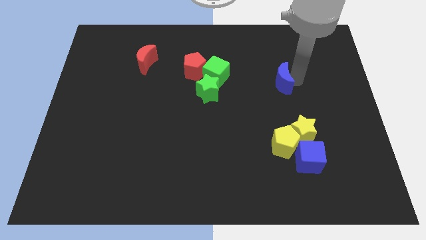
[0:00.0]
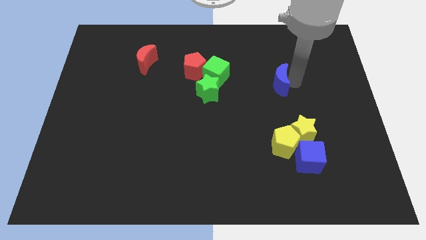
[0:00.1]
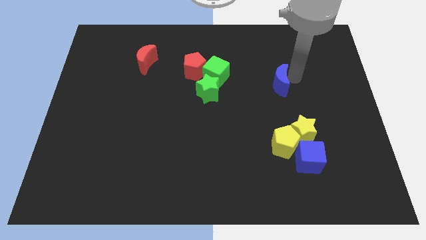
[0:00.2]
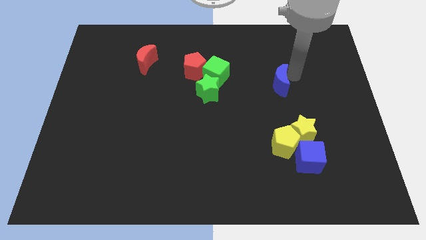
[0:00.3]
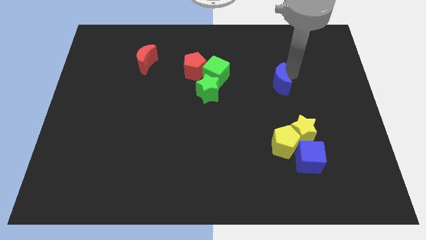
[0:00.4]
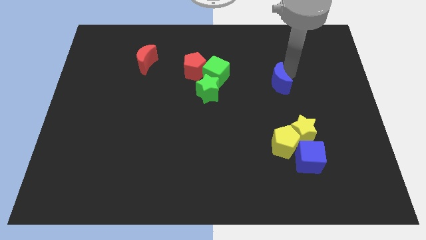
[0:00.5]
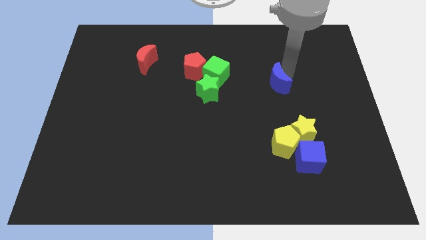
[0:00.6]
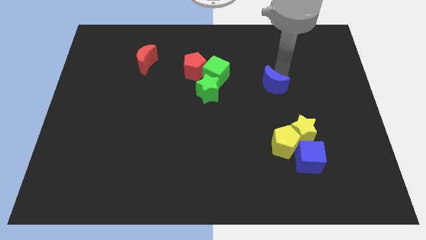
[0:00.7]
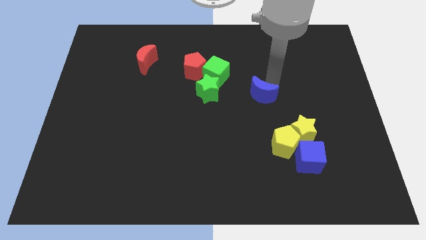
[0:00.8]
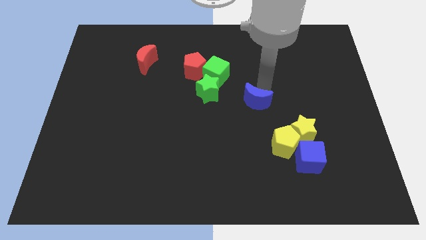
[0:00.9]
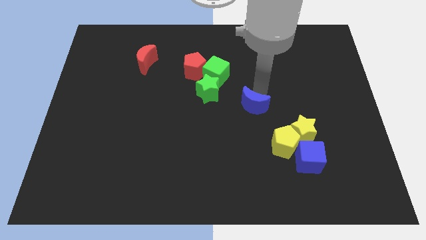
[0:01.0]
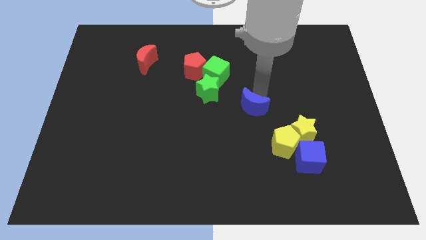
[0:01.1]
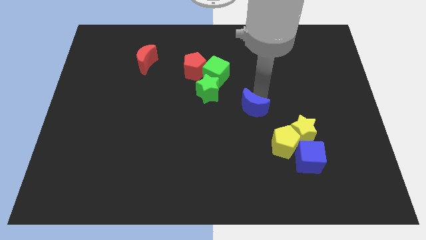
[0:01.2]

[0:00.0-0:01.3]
drag the blue moon towards the center

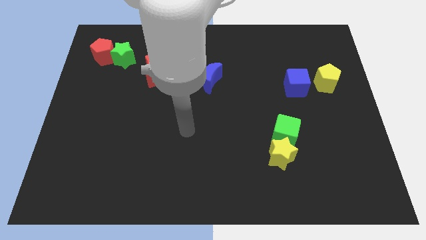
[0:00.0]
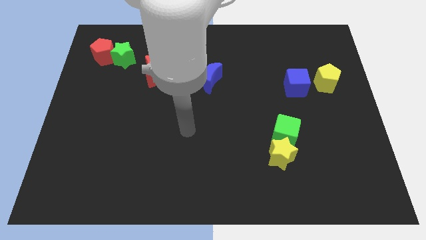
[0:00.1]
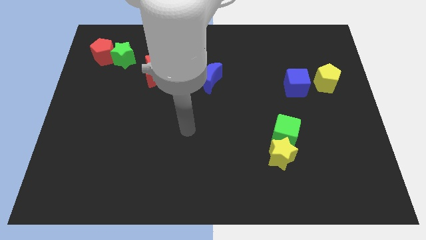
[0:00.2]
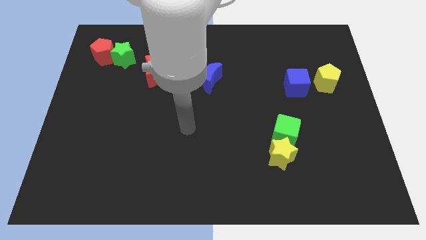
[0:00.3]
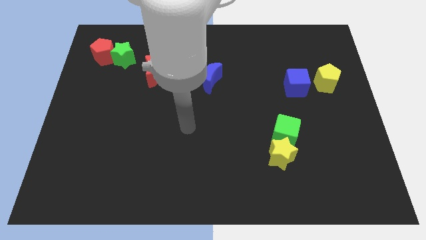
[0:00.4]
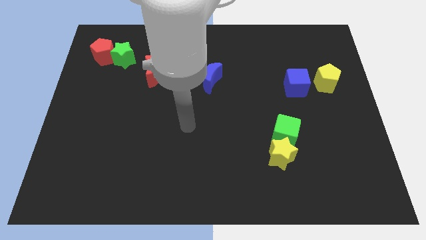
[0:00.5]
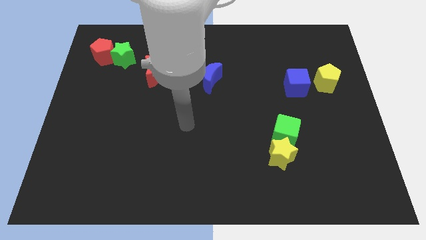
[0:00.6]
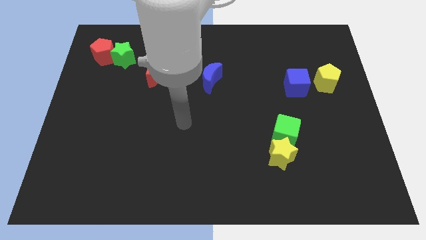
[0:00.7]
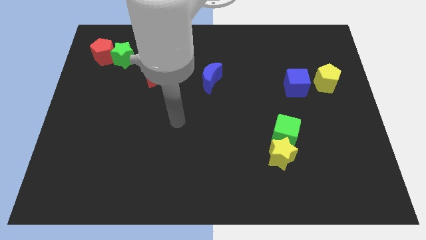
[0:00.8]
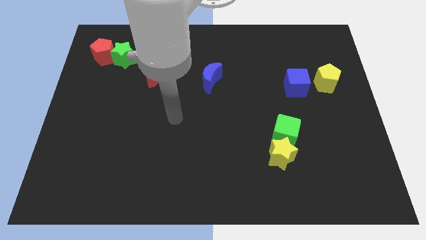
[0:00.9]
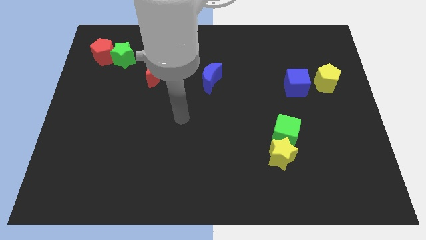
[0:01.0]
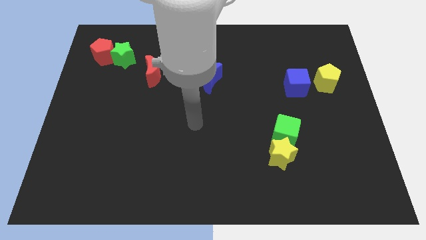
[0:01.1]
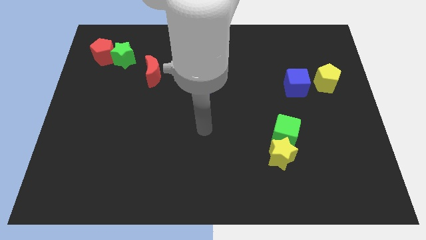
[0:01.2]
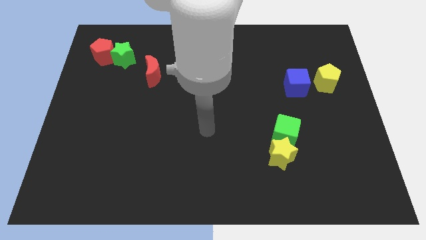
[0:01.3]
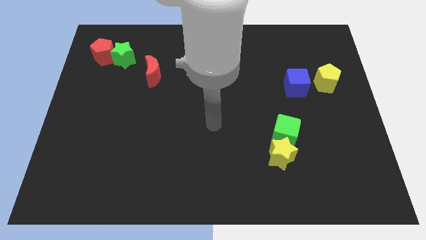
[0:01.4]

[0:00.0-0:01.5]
point your arm at the center of the board

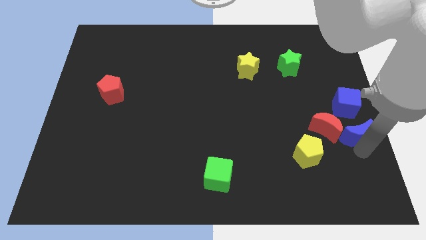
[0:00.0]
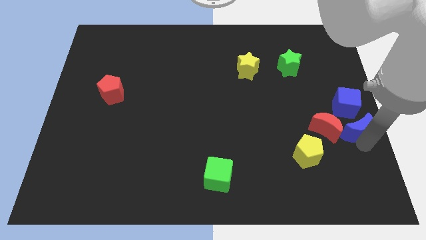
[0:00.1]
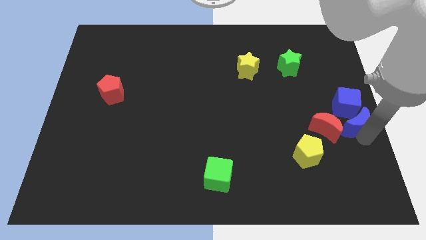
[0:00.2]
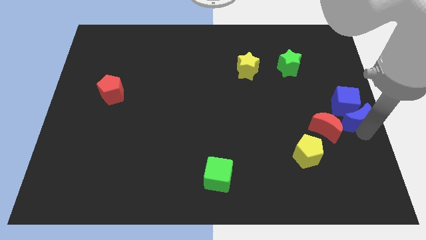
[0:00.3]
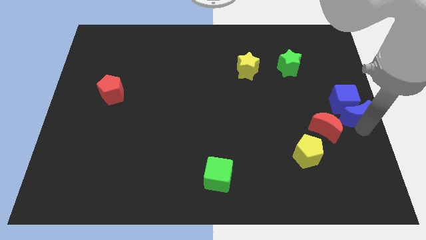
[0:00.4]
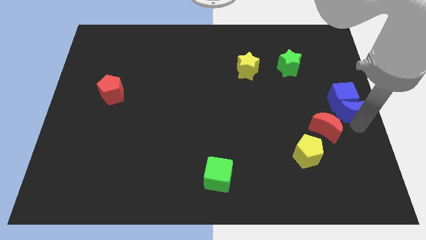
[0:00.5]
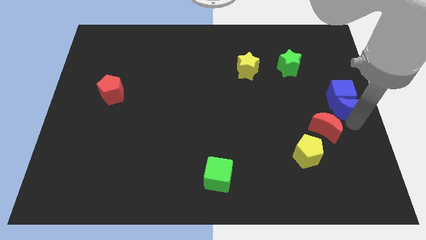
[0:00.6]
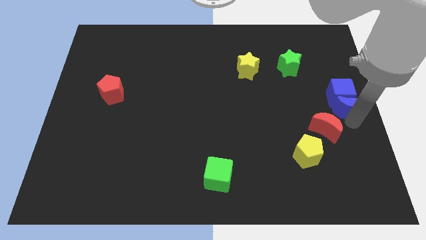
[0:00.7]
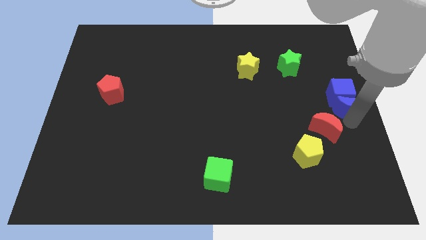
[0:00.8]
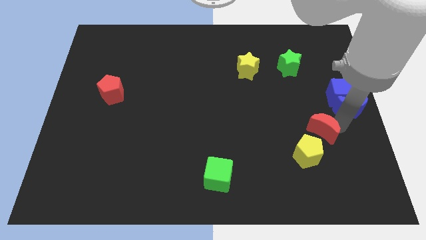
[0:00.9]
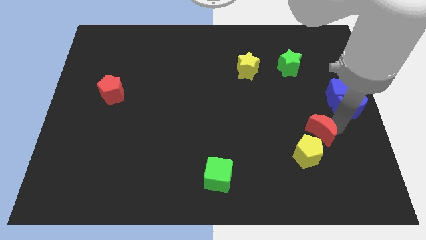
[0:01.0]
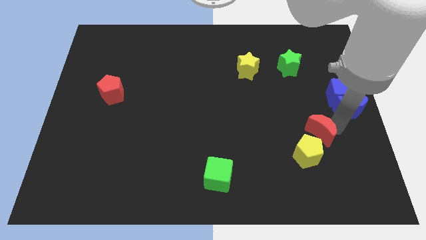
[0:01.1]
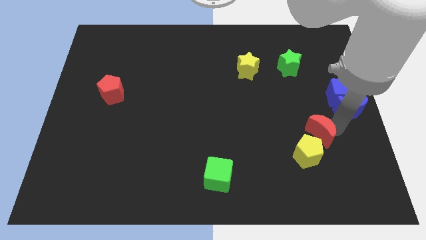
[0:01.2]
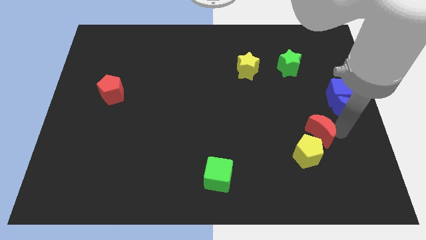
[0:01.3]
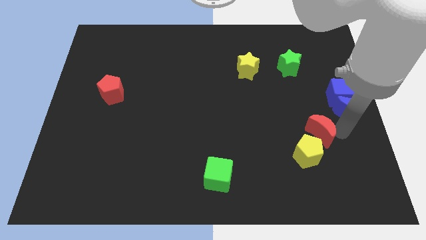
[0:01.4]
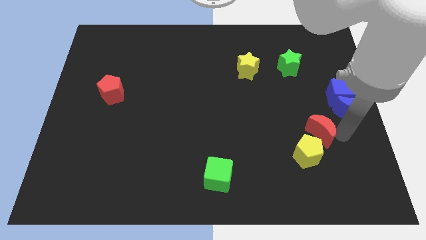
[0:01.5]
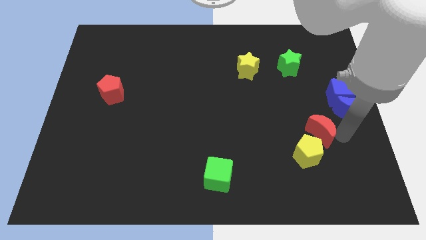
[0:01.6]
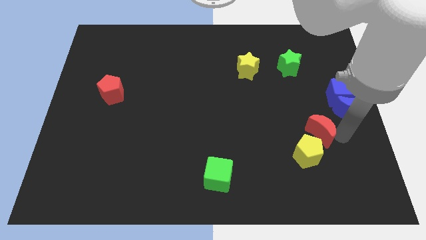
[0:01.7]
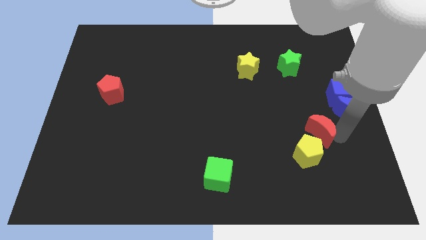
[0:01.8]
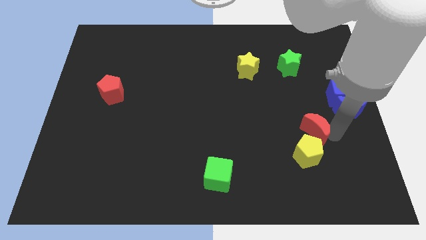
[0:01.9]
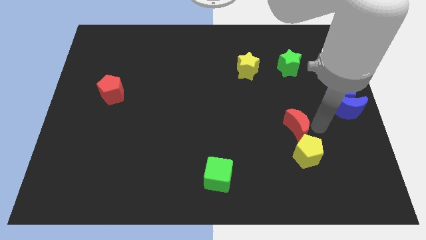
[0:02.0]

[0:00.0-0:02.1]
separate red moon from the blue moon

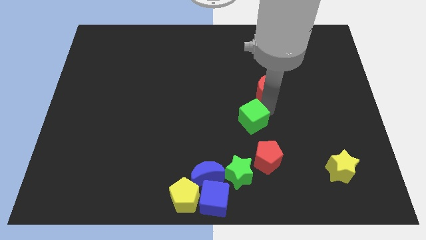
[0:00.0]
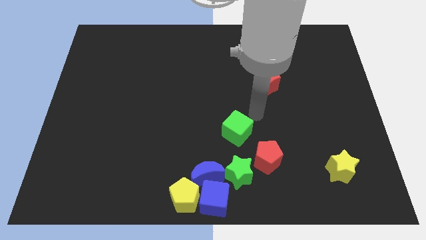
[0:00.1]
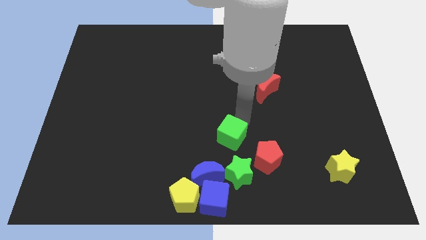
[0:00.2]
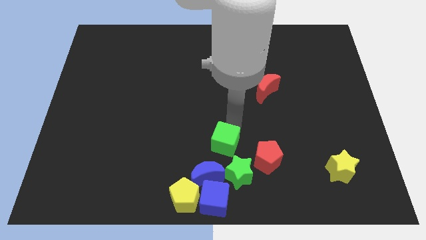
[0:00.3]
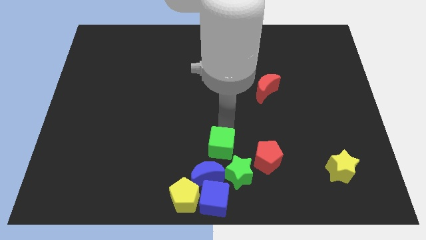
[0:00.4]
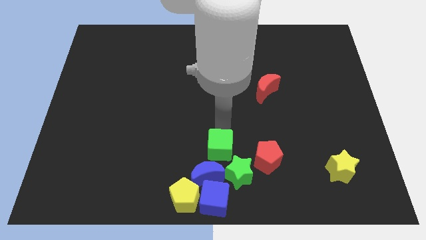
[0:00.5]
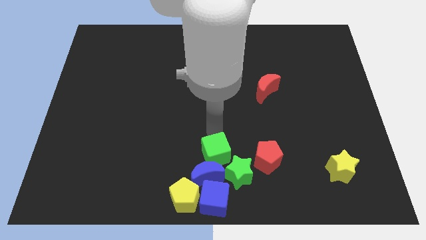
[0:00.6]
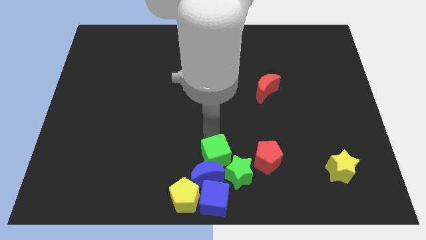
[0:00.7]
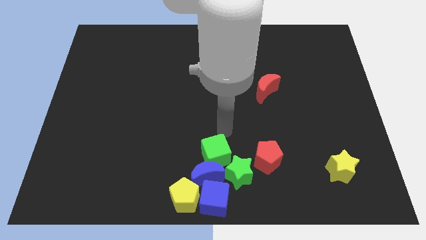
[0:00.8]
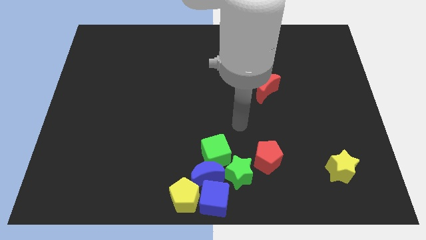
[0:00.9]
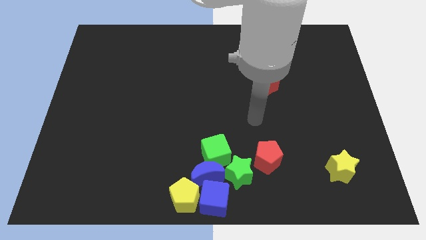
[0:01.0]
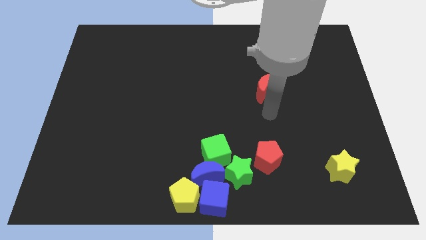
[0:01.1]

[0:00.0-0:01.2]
place the green cube to the top left of the green star

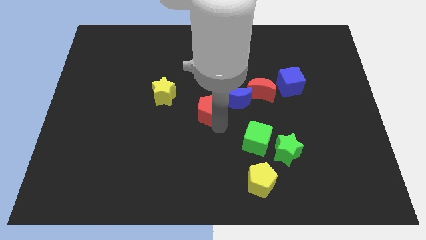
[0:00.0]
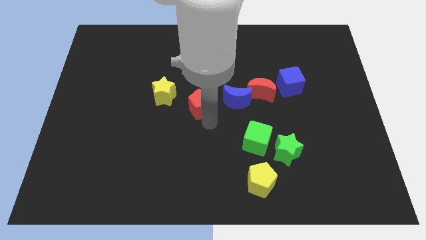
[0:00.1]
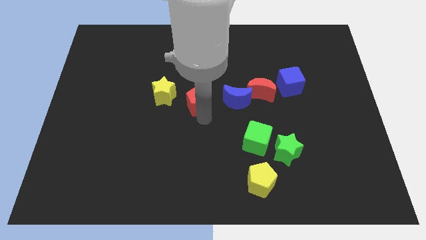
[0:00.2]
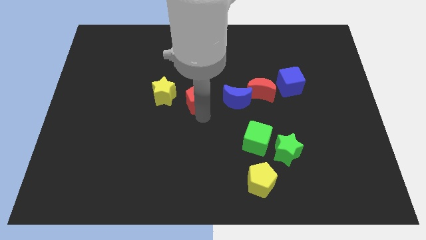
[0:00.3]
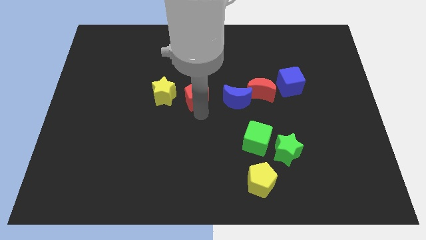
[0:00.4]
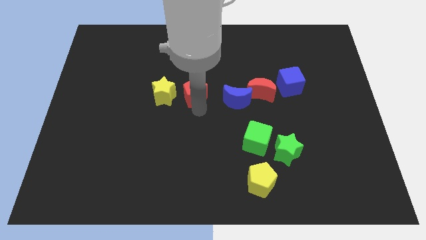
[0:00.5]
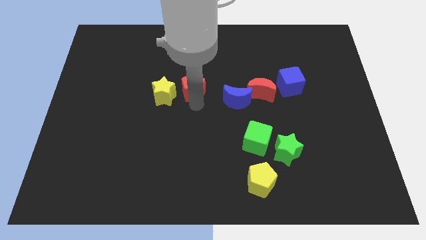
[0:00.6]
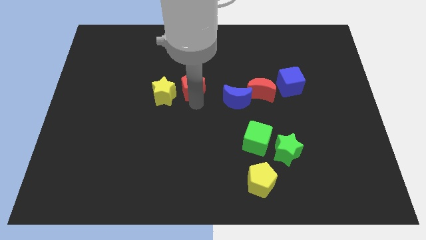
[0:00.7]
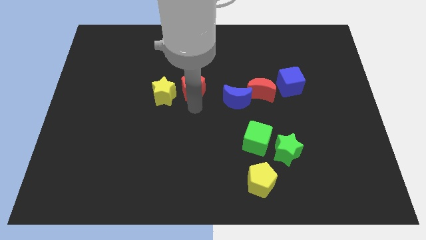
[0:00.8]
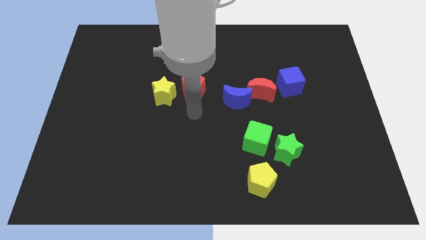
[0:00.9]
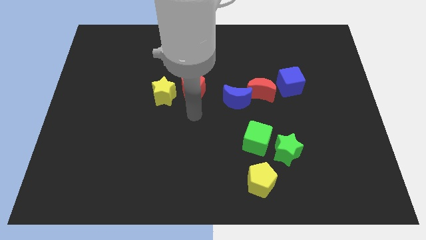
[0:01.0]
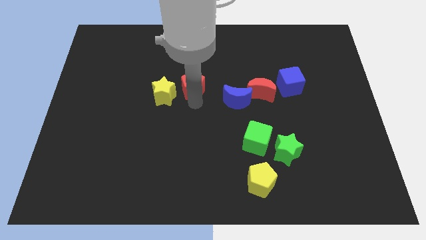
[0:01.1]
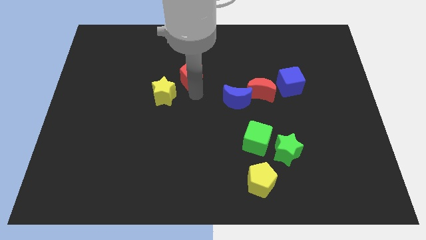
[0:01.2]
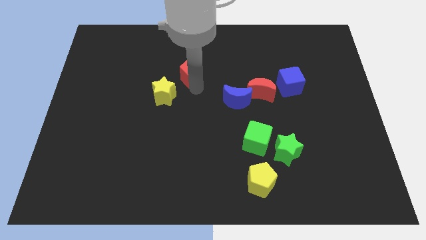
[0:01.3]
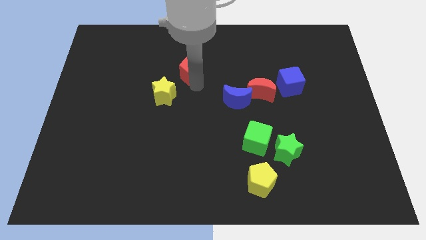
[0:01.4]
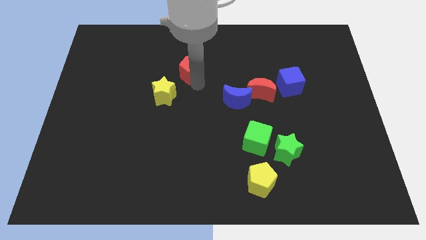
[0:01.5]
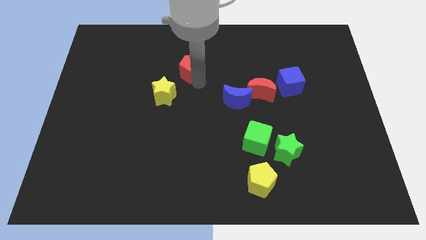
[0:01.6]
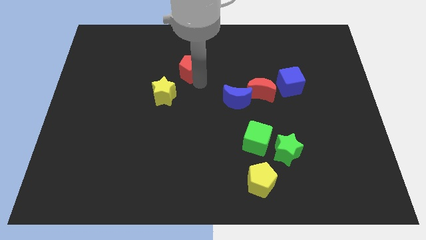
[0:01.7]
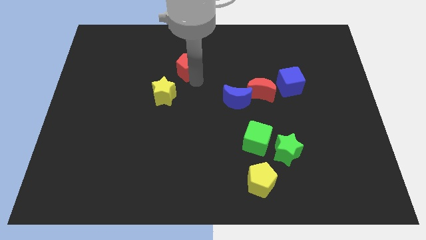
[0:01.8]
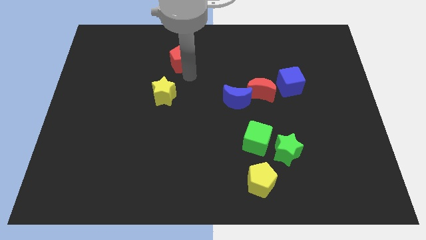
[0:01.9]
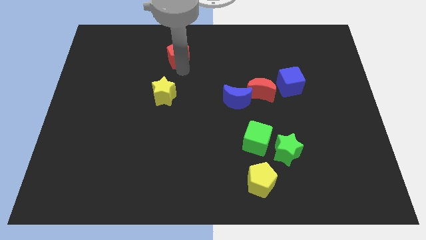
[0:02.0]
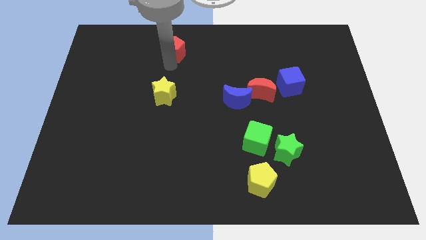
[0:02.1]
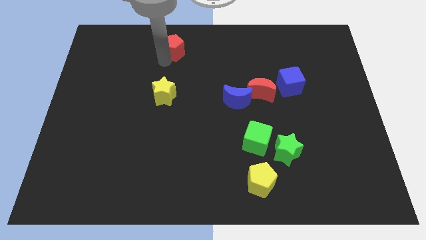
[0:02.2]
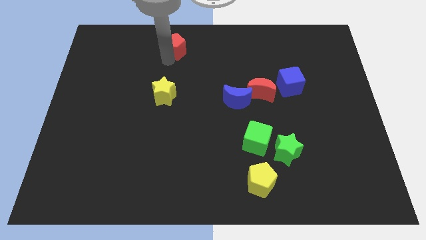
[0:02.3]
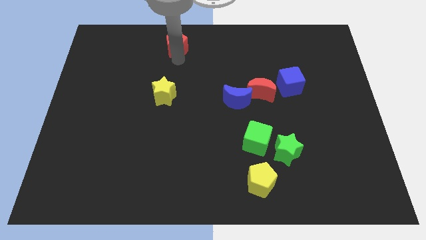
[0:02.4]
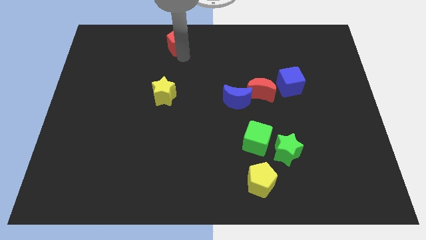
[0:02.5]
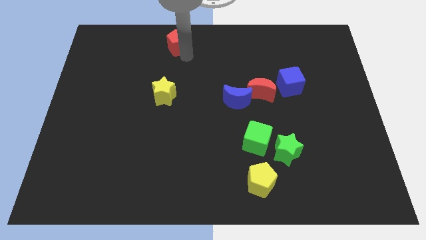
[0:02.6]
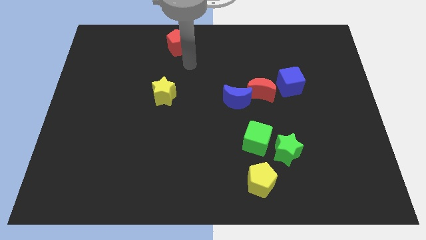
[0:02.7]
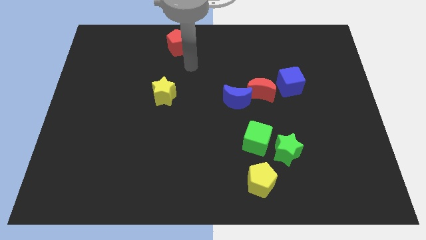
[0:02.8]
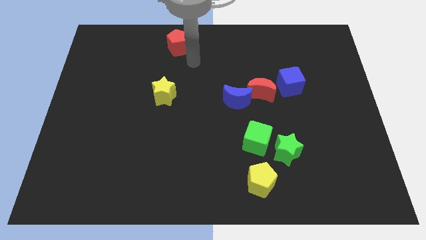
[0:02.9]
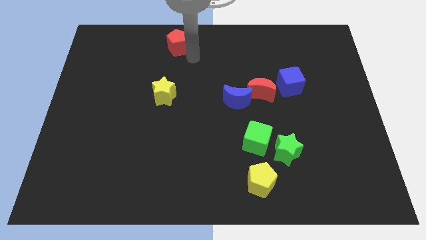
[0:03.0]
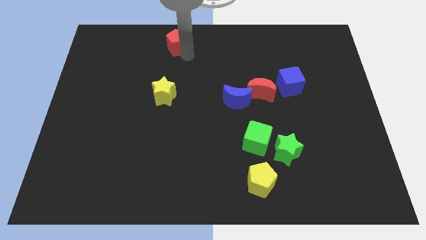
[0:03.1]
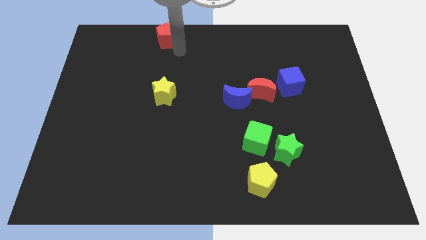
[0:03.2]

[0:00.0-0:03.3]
move red pentagon towards the top
